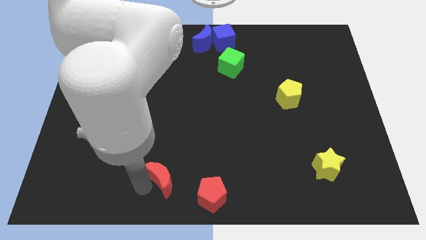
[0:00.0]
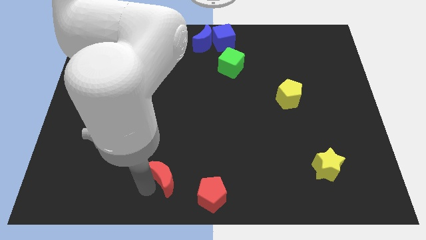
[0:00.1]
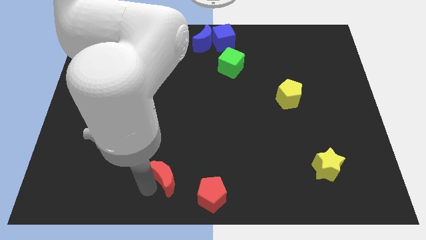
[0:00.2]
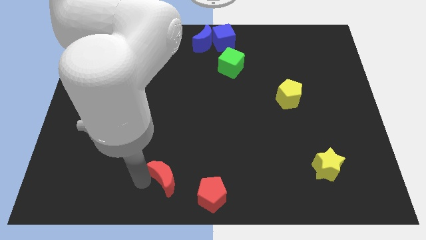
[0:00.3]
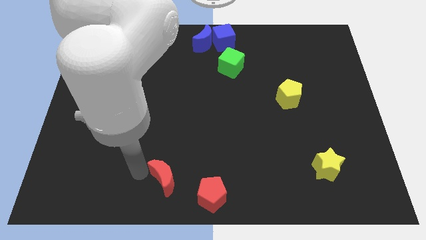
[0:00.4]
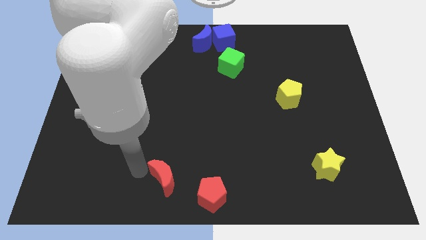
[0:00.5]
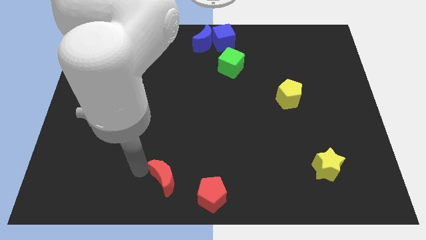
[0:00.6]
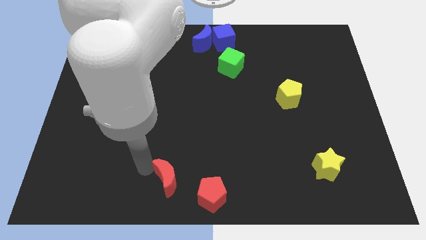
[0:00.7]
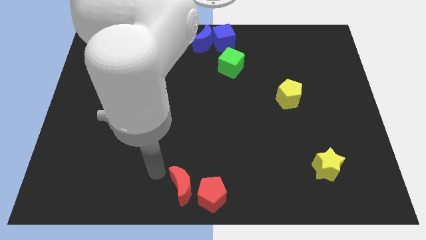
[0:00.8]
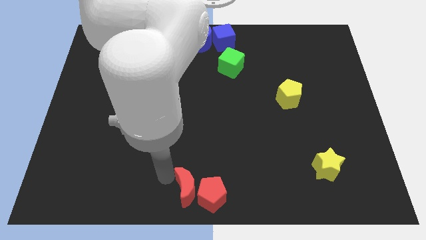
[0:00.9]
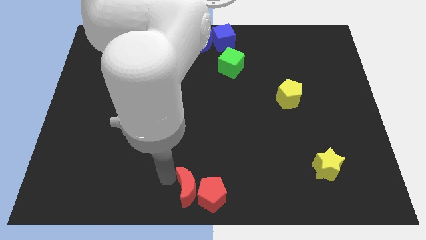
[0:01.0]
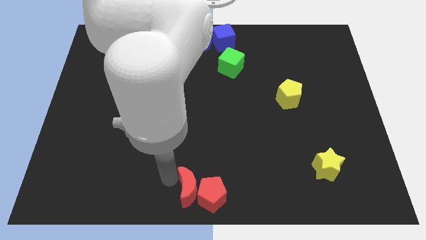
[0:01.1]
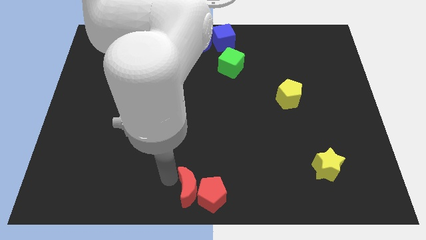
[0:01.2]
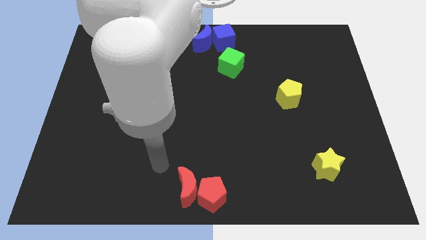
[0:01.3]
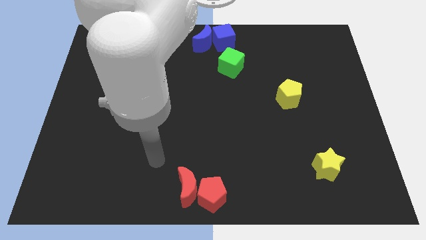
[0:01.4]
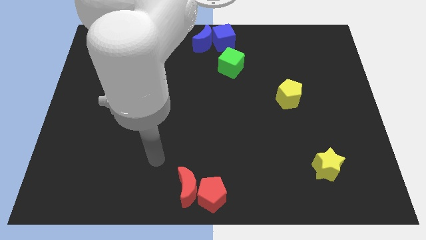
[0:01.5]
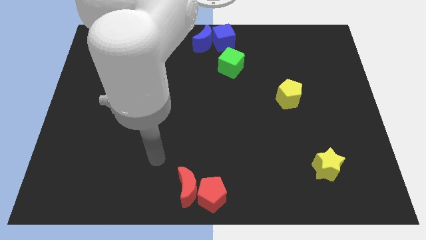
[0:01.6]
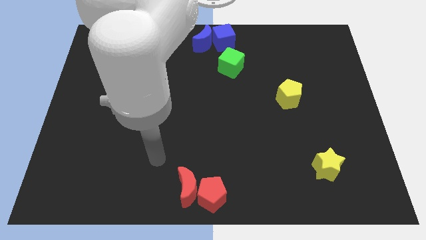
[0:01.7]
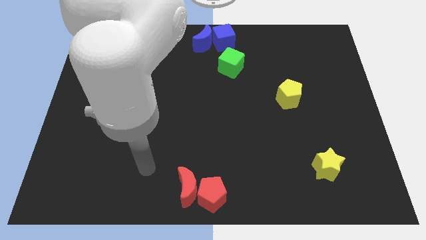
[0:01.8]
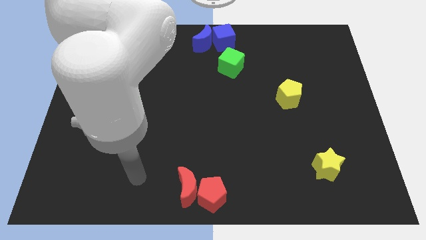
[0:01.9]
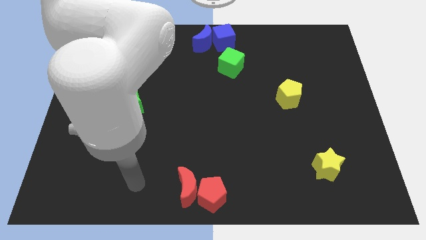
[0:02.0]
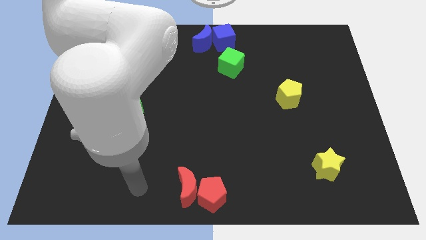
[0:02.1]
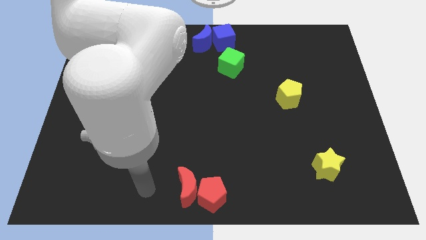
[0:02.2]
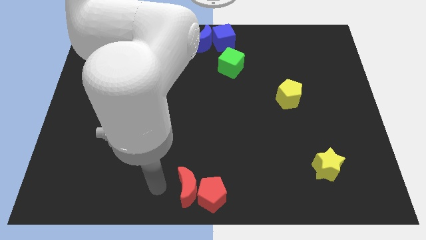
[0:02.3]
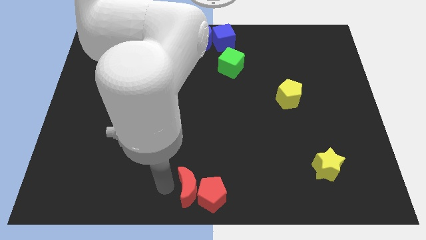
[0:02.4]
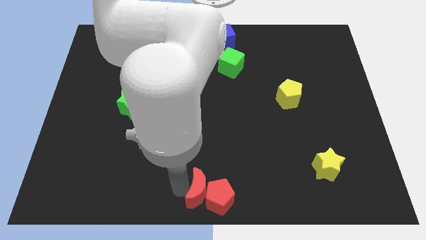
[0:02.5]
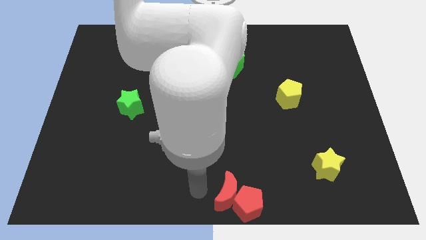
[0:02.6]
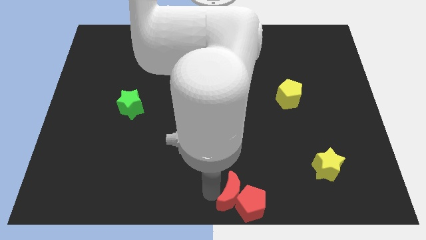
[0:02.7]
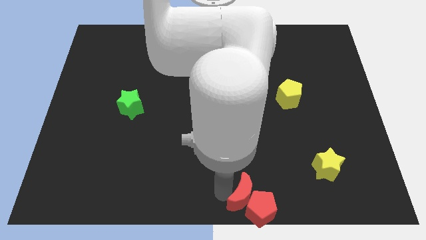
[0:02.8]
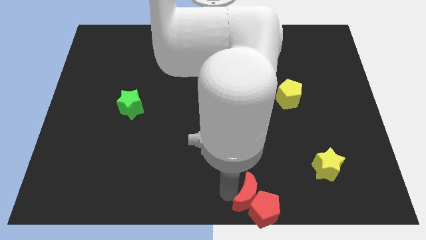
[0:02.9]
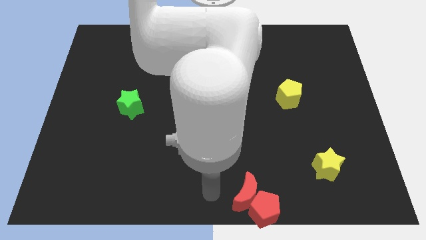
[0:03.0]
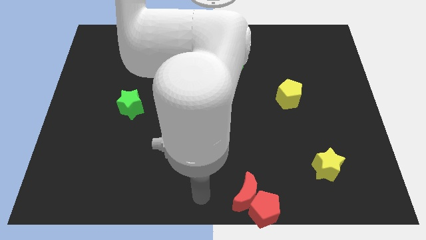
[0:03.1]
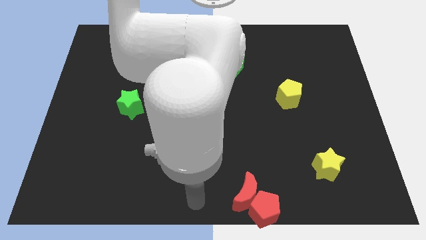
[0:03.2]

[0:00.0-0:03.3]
push the red moon with red pentagon towards yellow star

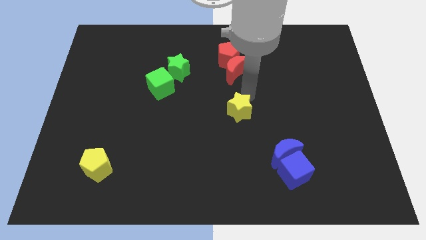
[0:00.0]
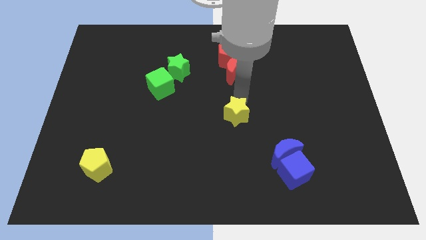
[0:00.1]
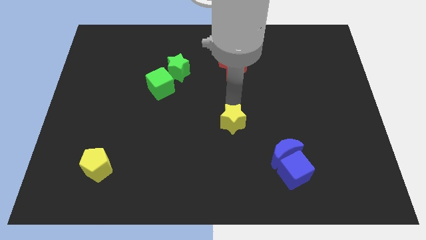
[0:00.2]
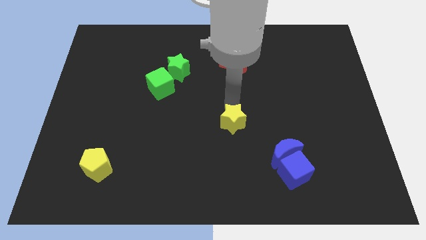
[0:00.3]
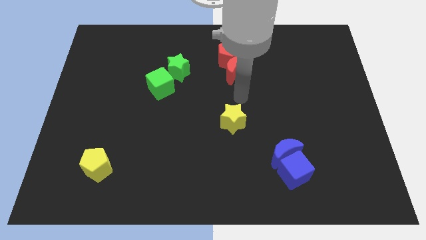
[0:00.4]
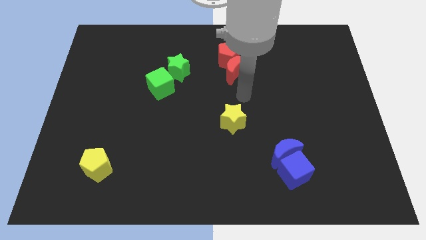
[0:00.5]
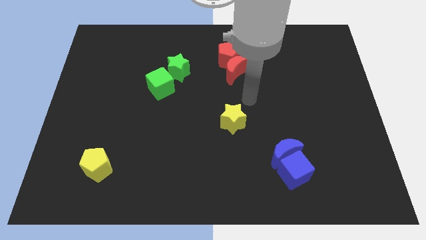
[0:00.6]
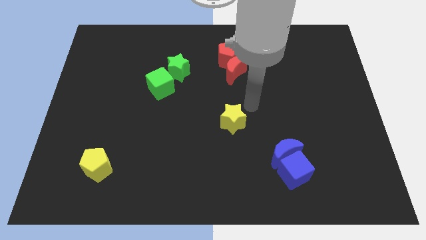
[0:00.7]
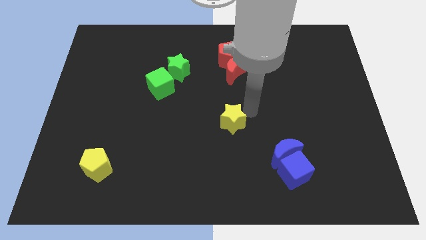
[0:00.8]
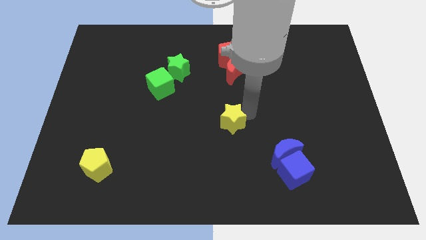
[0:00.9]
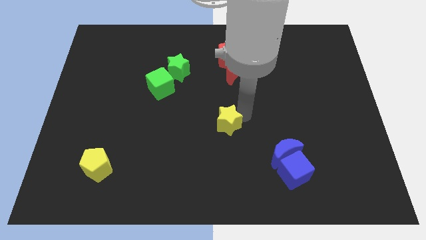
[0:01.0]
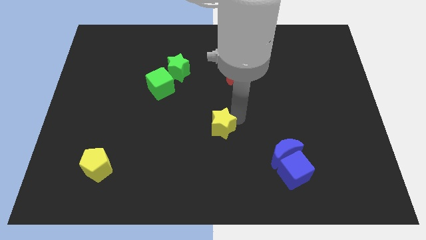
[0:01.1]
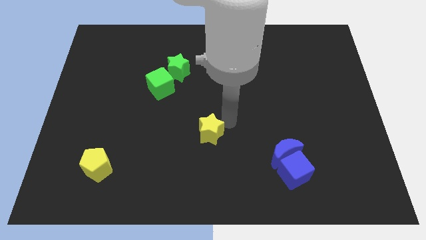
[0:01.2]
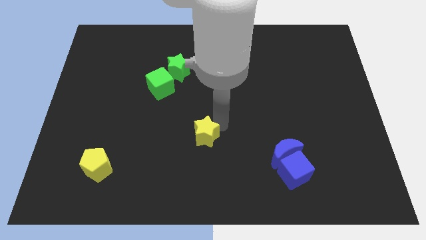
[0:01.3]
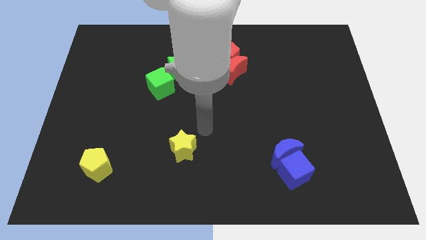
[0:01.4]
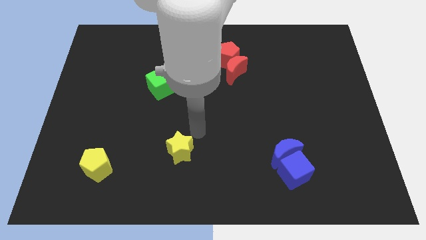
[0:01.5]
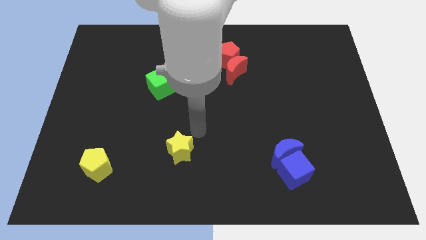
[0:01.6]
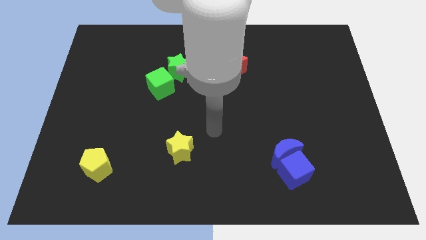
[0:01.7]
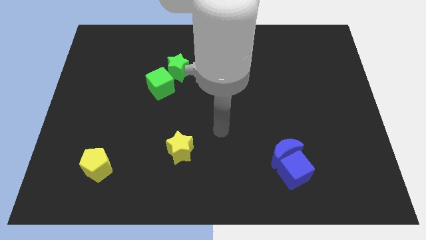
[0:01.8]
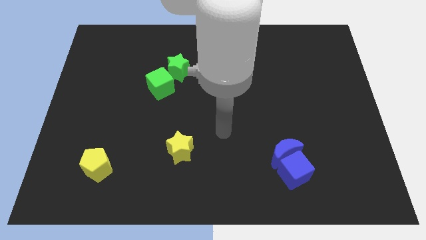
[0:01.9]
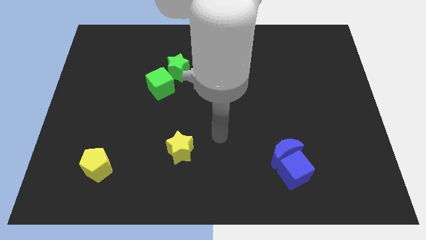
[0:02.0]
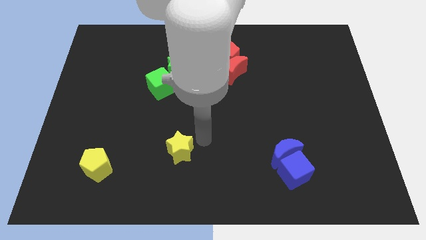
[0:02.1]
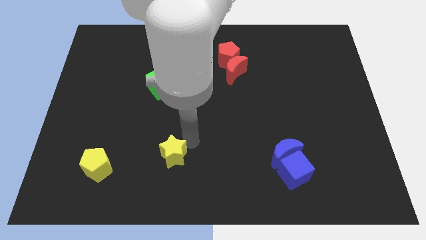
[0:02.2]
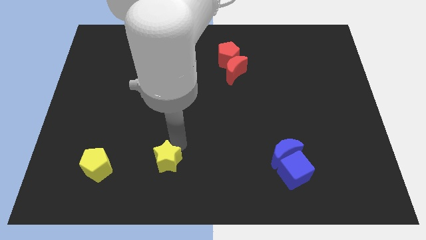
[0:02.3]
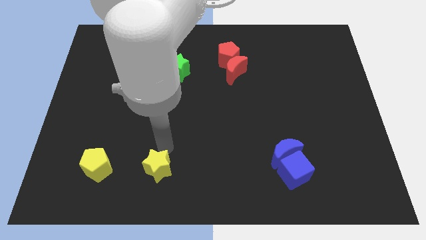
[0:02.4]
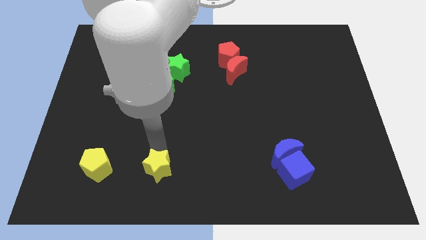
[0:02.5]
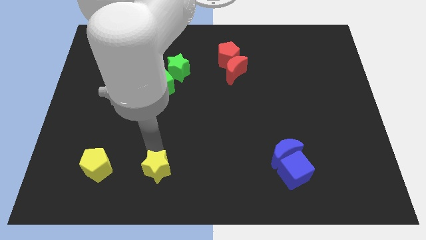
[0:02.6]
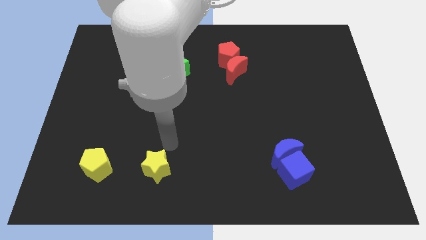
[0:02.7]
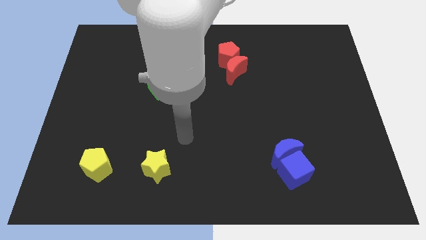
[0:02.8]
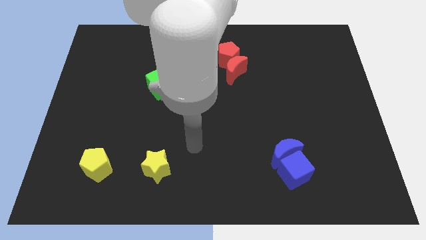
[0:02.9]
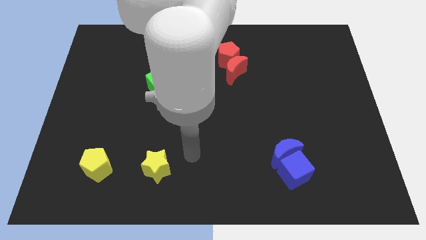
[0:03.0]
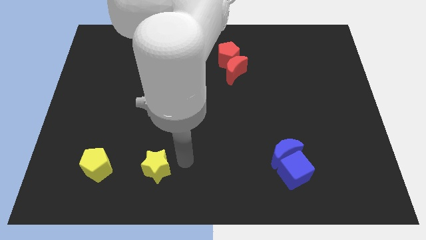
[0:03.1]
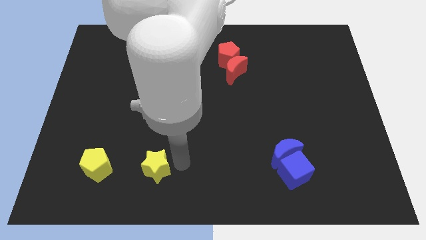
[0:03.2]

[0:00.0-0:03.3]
place yellow star to the right of yellow pentagon

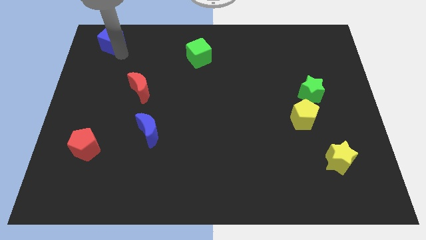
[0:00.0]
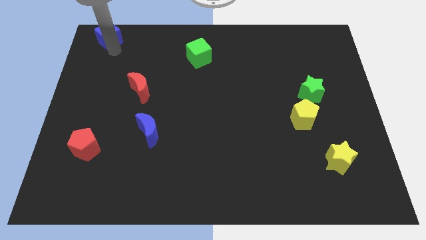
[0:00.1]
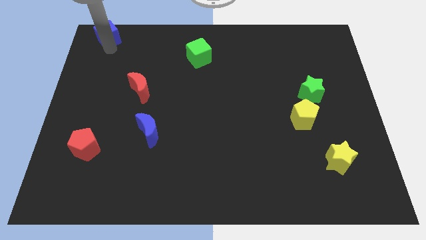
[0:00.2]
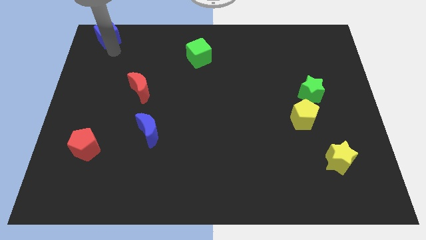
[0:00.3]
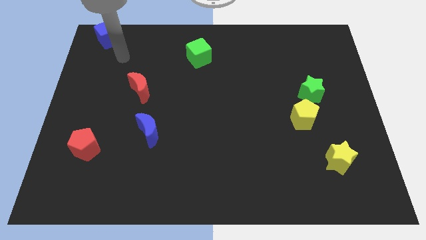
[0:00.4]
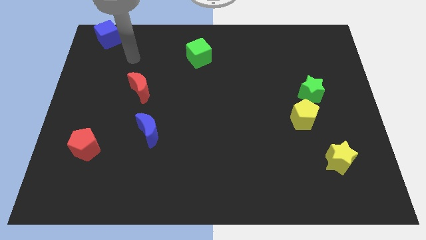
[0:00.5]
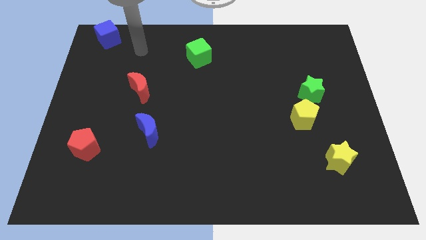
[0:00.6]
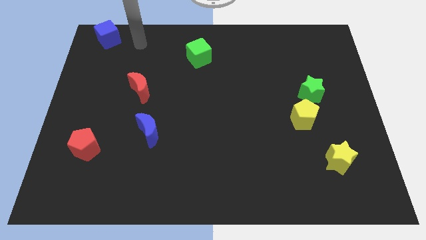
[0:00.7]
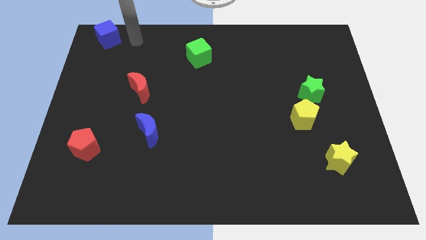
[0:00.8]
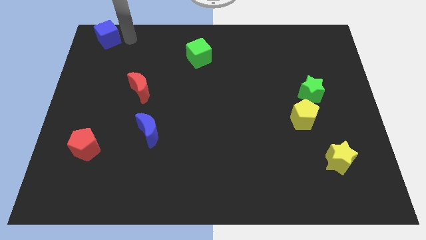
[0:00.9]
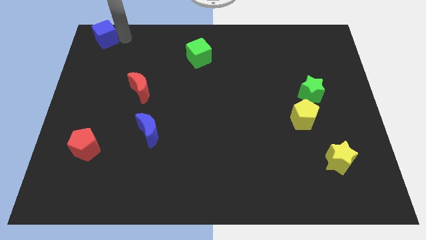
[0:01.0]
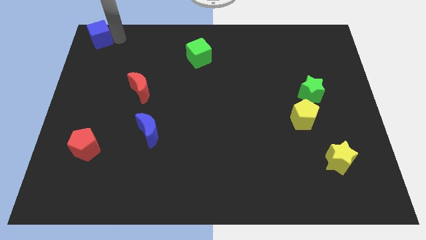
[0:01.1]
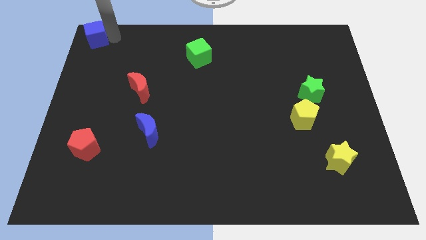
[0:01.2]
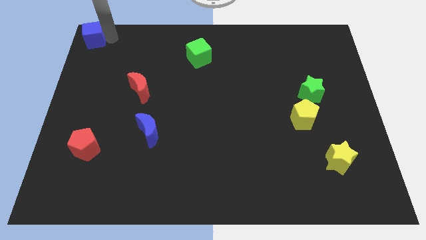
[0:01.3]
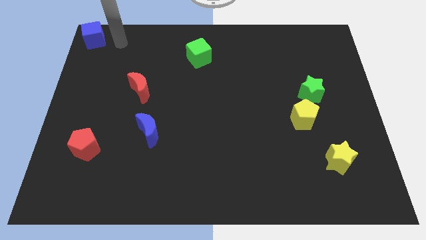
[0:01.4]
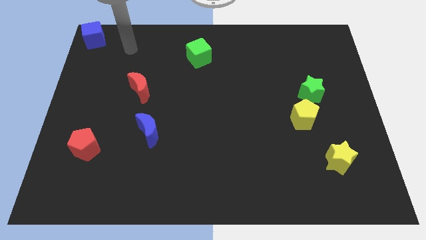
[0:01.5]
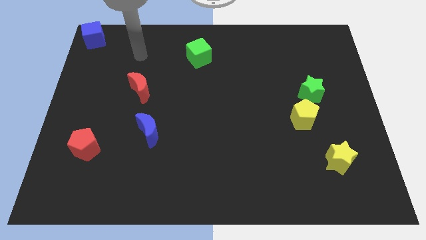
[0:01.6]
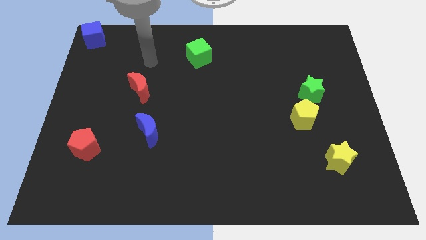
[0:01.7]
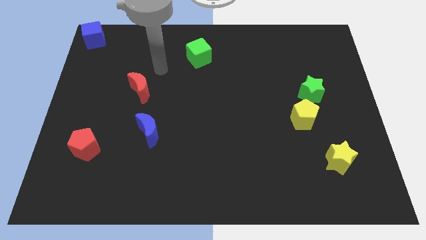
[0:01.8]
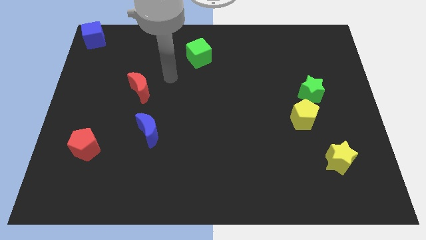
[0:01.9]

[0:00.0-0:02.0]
move your arm to the right side of the red crescent

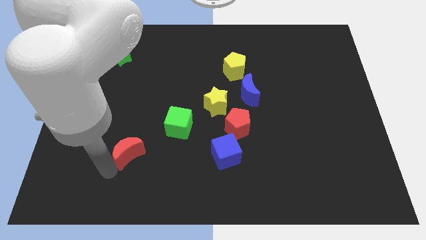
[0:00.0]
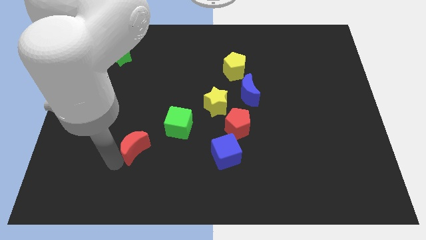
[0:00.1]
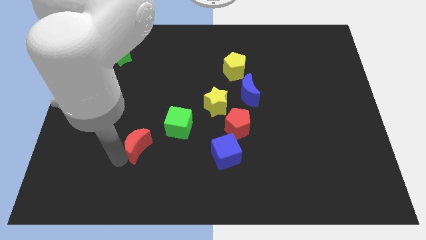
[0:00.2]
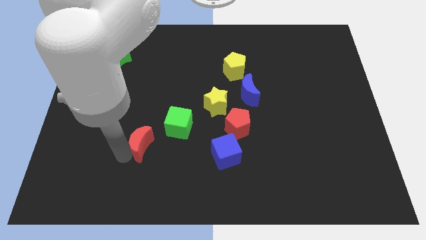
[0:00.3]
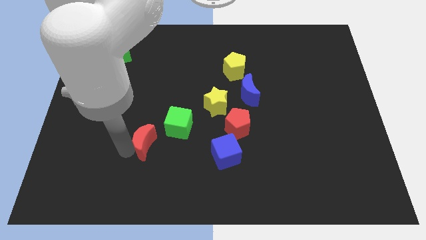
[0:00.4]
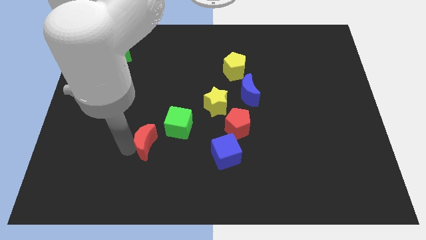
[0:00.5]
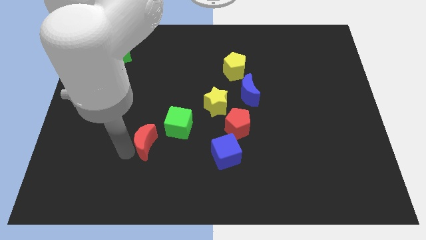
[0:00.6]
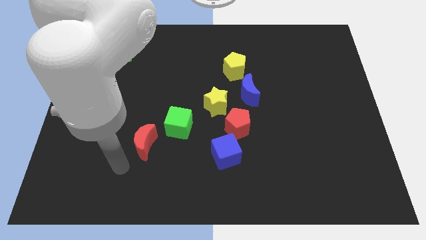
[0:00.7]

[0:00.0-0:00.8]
move the red crescent near to the green cube
